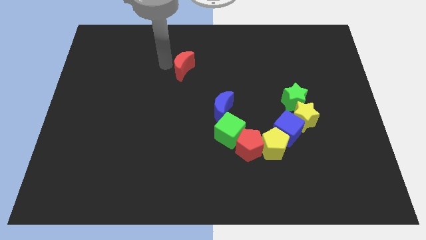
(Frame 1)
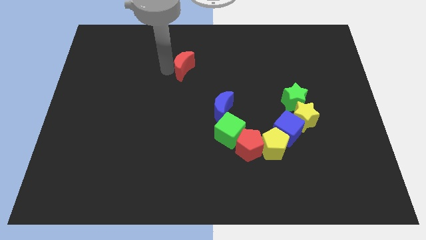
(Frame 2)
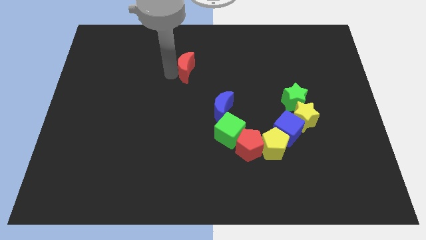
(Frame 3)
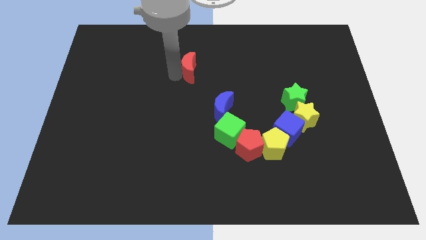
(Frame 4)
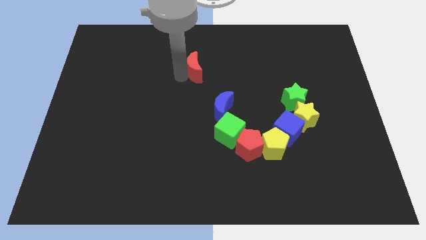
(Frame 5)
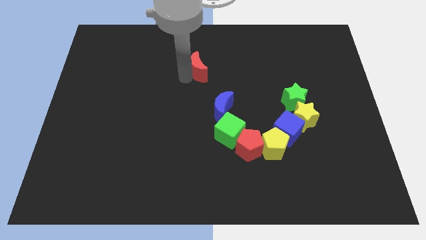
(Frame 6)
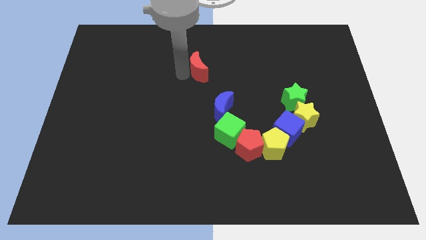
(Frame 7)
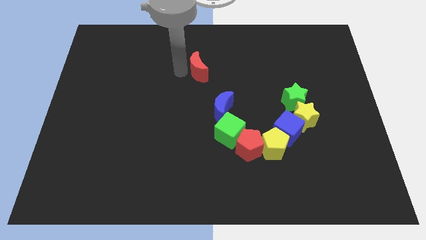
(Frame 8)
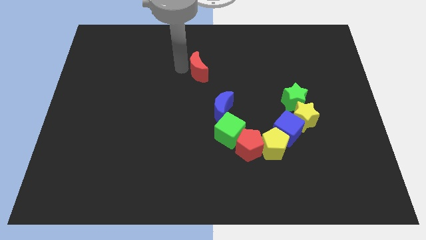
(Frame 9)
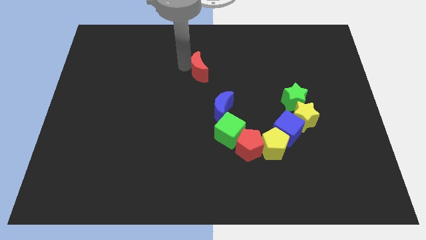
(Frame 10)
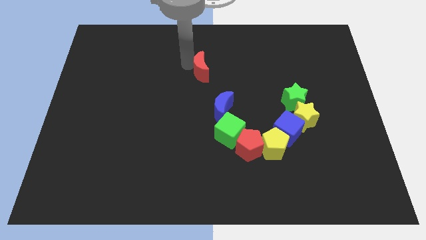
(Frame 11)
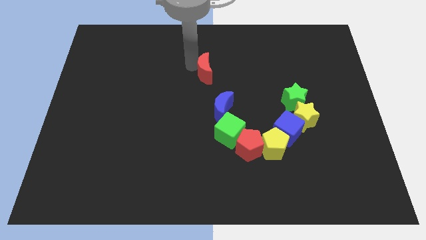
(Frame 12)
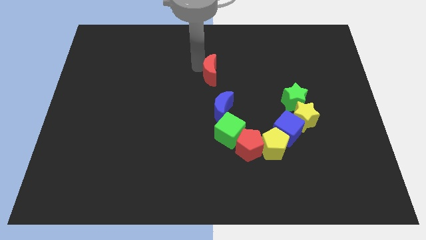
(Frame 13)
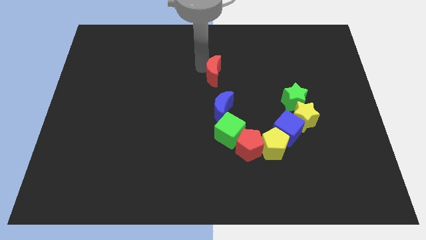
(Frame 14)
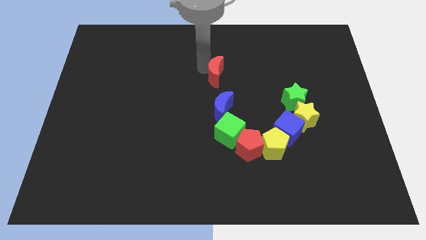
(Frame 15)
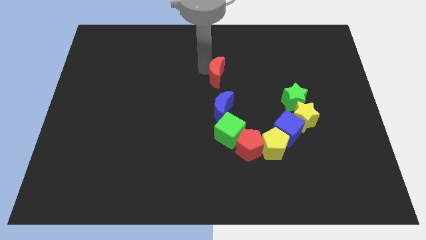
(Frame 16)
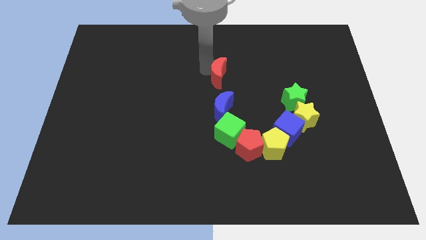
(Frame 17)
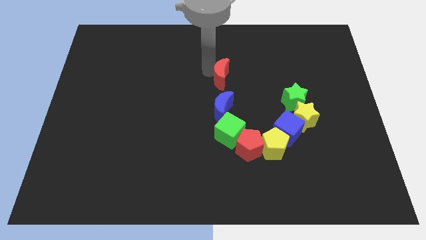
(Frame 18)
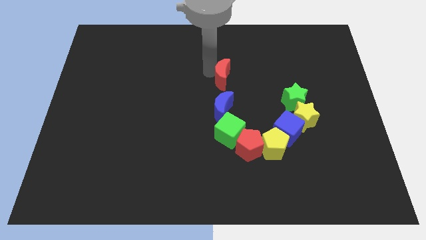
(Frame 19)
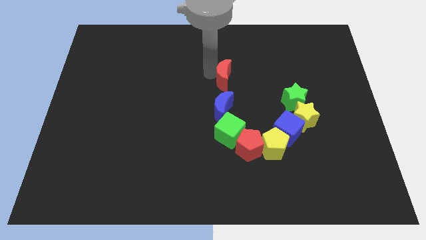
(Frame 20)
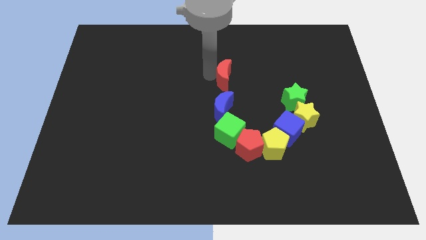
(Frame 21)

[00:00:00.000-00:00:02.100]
push the red crescent above the blue crescent

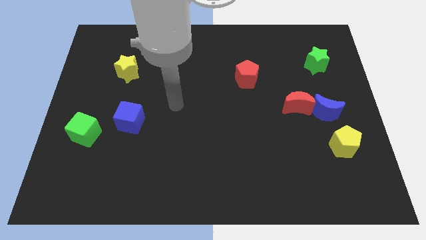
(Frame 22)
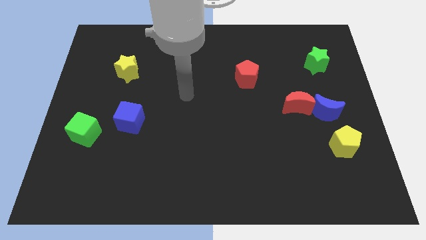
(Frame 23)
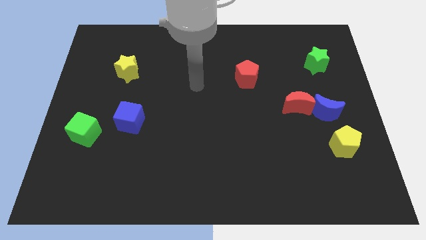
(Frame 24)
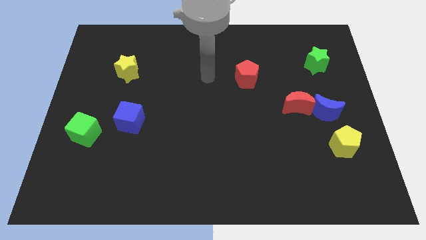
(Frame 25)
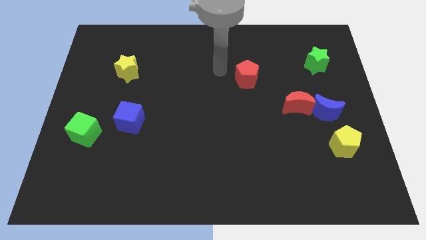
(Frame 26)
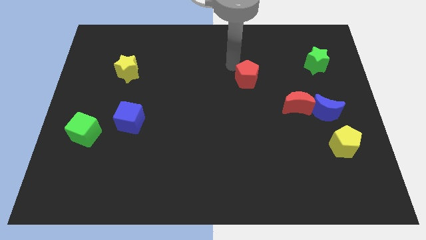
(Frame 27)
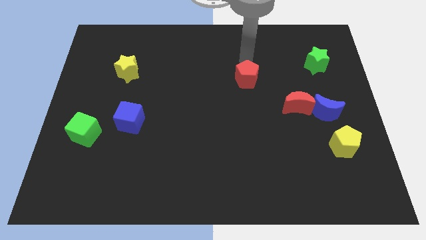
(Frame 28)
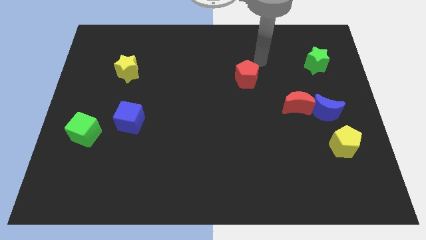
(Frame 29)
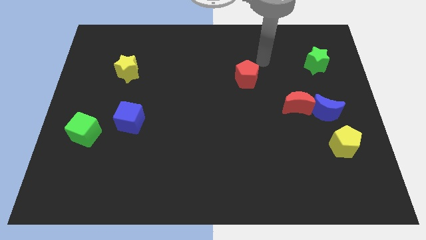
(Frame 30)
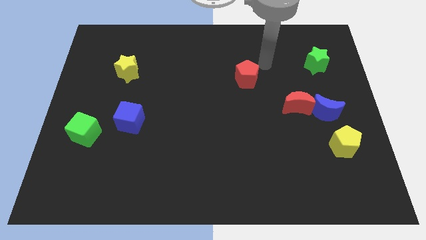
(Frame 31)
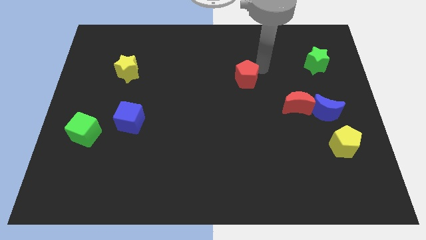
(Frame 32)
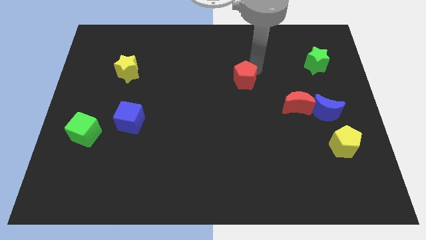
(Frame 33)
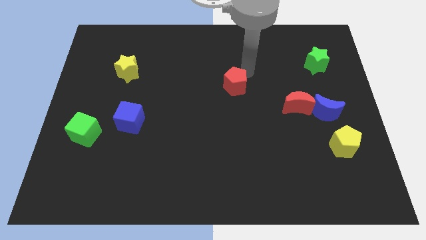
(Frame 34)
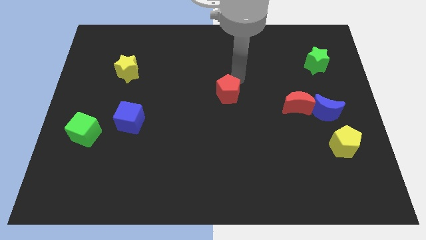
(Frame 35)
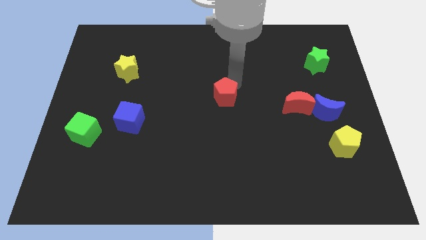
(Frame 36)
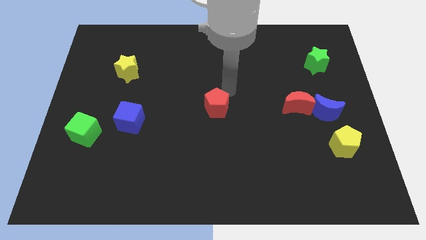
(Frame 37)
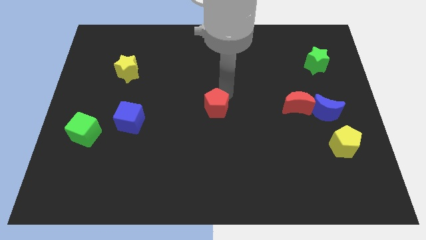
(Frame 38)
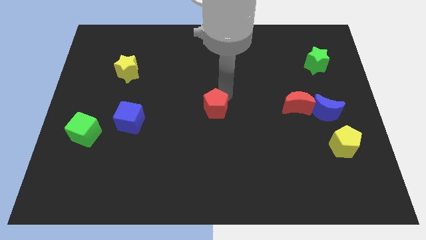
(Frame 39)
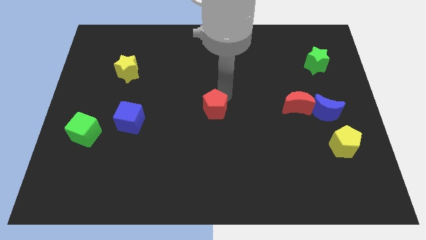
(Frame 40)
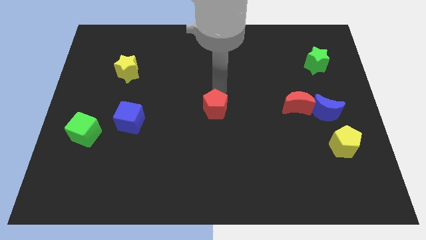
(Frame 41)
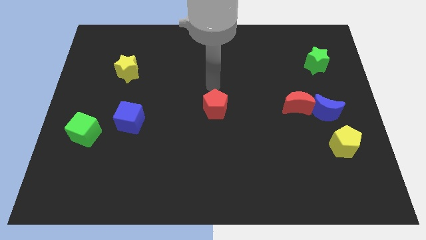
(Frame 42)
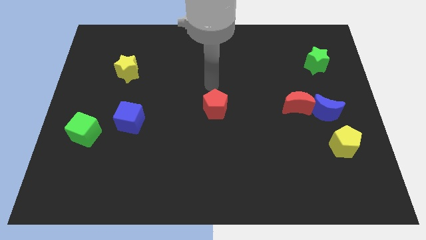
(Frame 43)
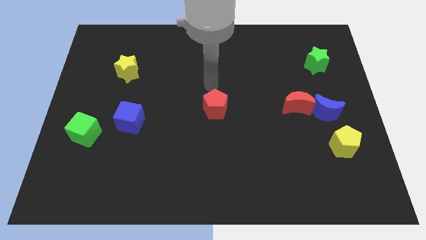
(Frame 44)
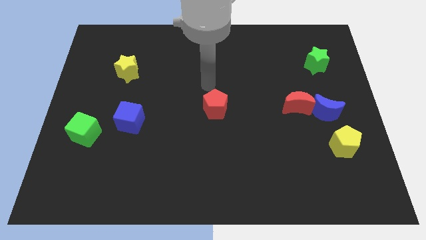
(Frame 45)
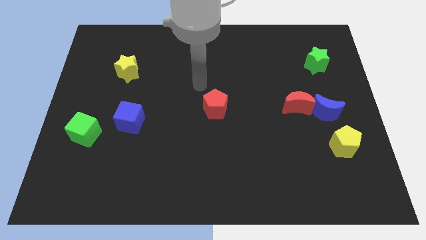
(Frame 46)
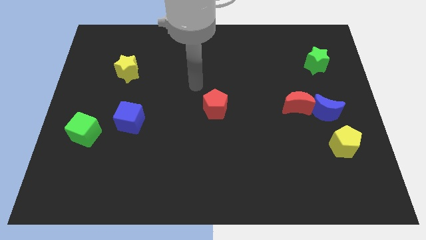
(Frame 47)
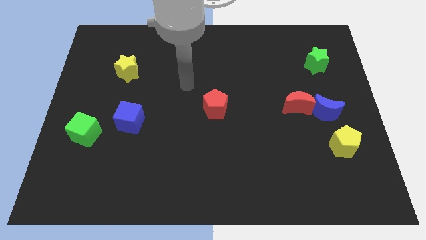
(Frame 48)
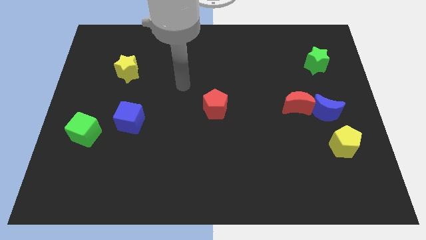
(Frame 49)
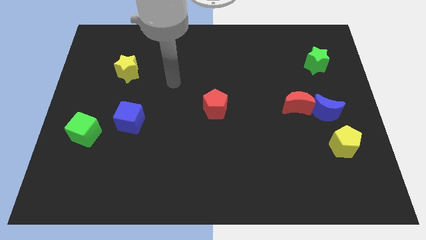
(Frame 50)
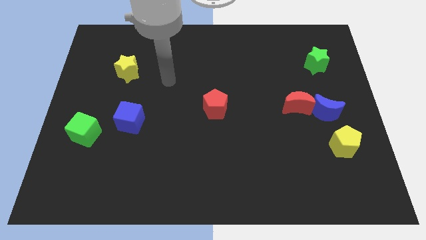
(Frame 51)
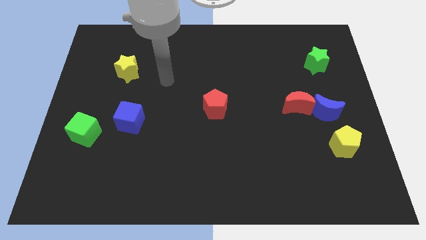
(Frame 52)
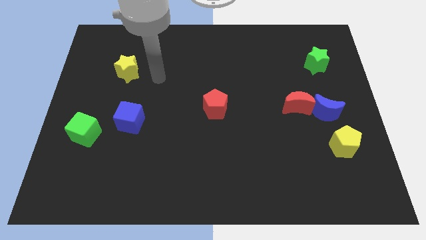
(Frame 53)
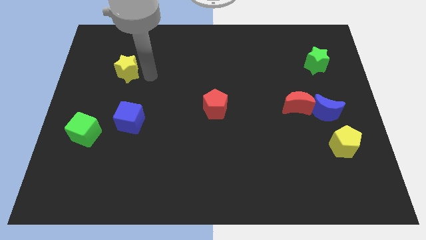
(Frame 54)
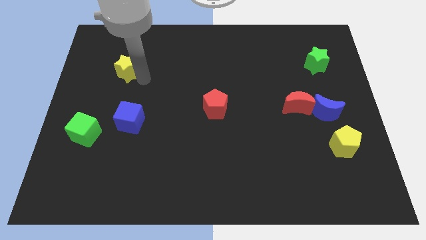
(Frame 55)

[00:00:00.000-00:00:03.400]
place the red pentagon at the center of the board

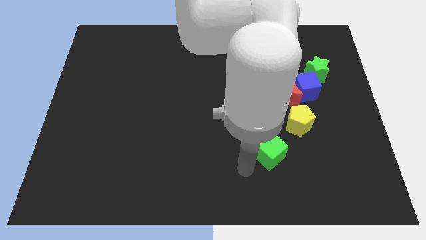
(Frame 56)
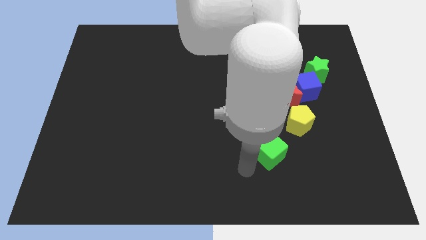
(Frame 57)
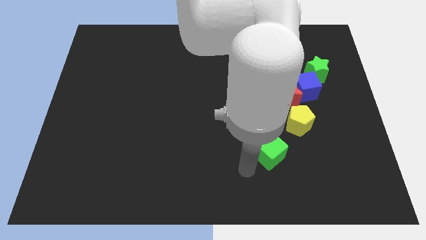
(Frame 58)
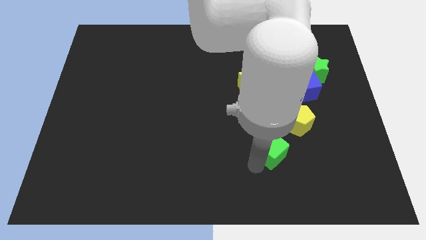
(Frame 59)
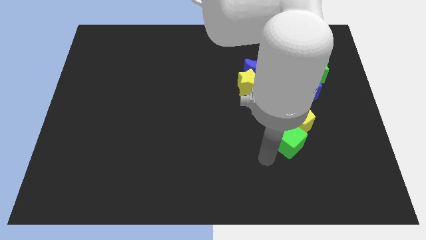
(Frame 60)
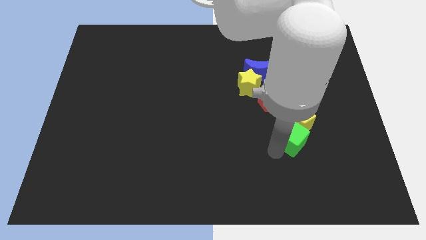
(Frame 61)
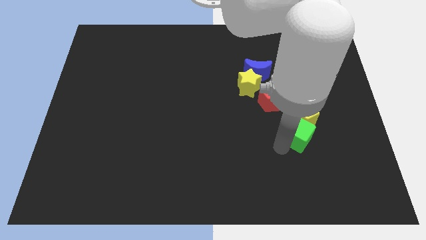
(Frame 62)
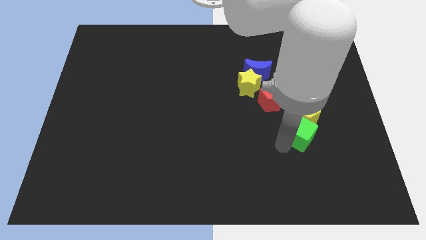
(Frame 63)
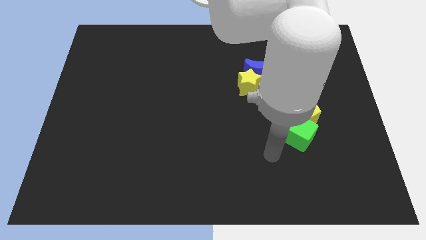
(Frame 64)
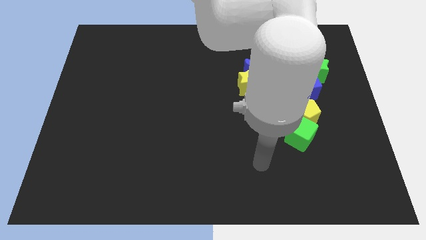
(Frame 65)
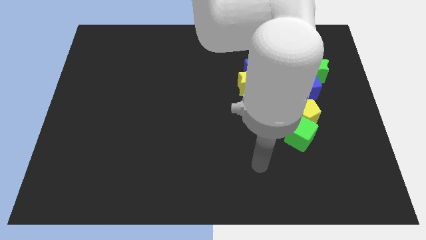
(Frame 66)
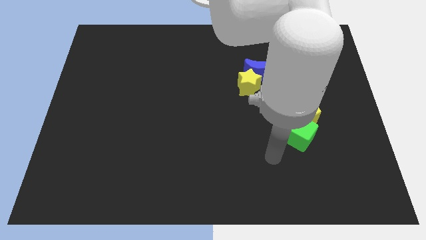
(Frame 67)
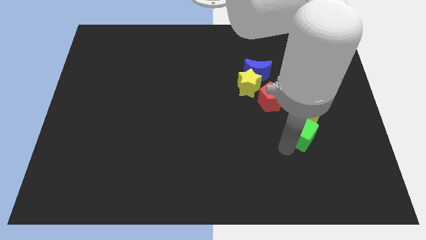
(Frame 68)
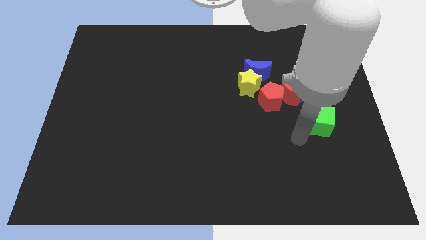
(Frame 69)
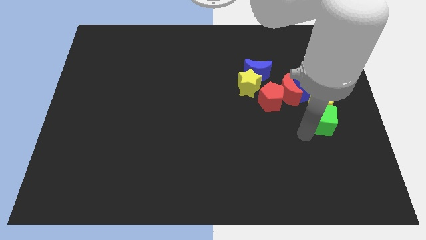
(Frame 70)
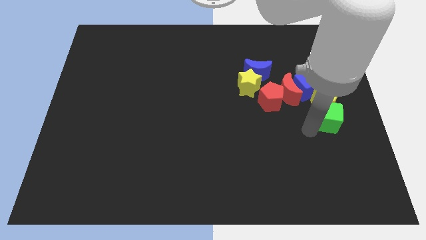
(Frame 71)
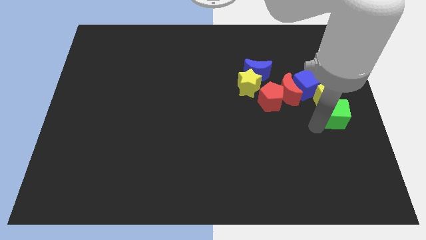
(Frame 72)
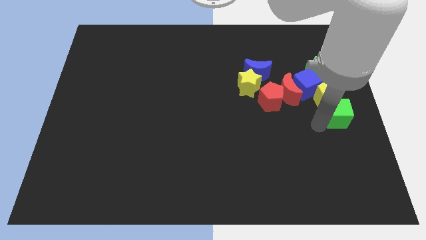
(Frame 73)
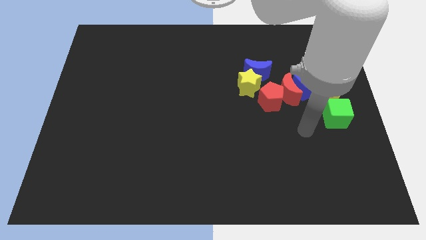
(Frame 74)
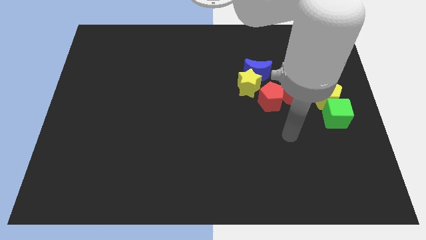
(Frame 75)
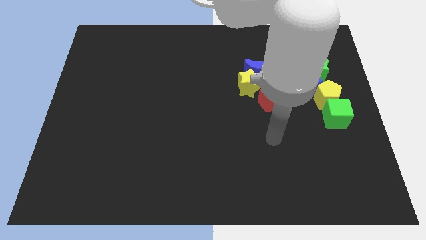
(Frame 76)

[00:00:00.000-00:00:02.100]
move yellow pentagon and green cube to the center right

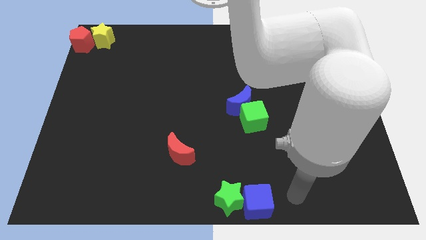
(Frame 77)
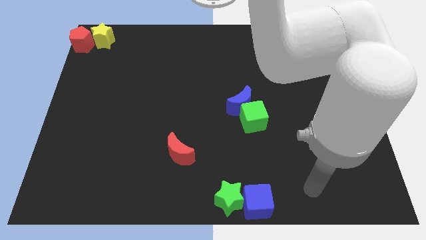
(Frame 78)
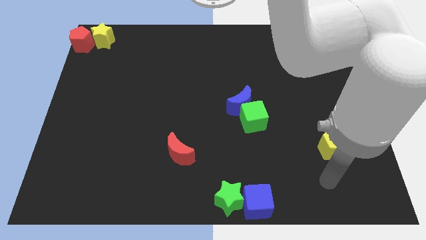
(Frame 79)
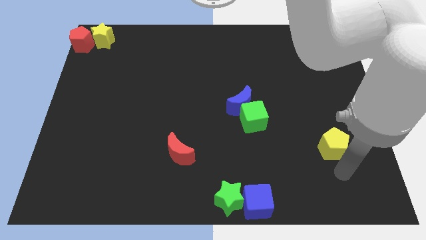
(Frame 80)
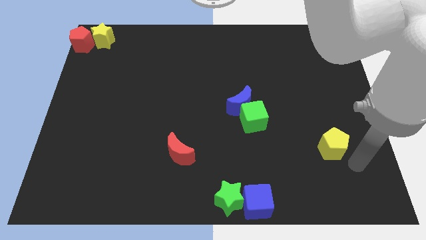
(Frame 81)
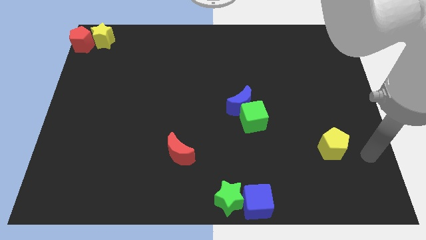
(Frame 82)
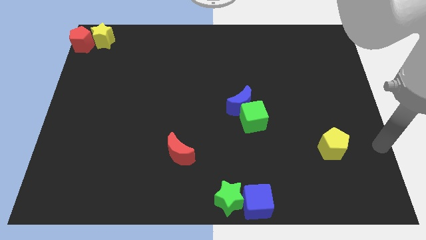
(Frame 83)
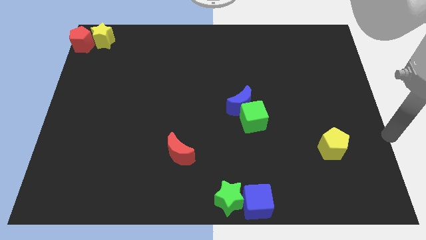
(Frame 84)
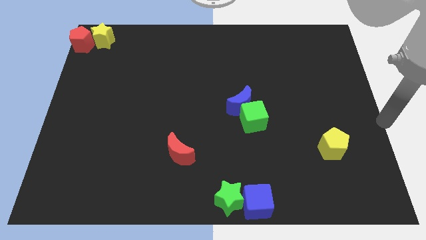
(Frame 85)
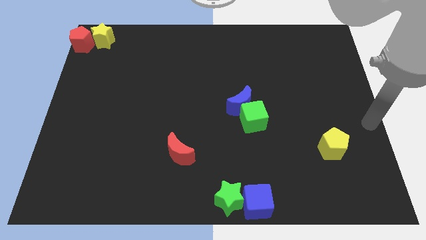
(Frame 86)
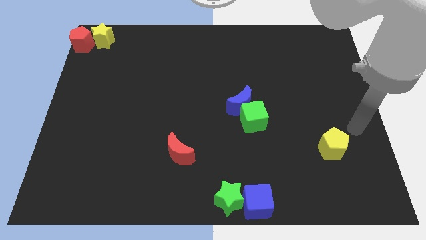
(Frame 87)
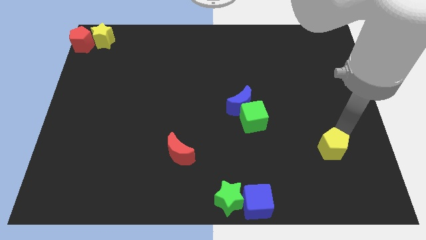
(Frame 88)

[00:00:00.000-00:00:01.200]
point the arm above the yellow pentagon
